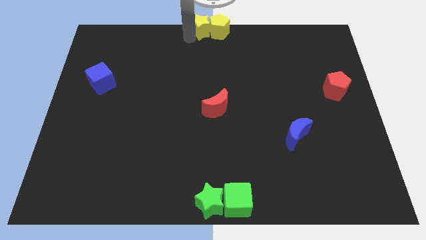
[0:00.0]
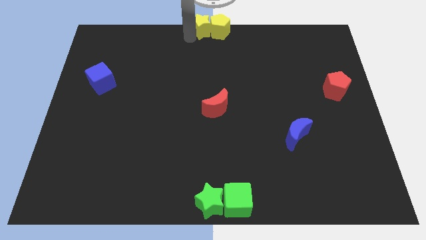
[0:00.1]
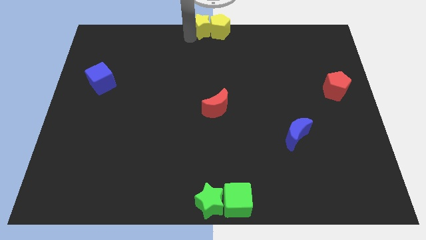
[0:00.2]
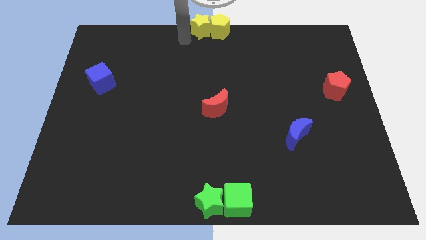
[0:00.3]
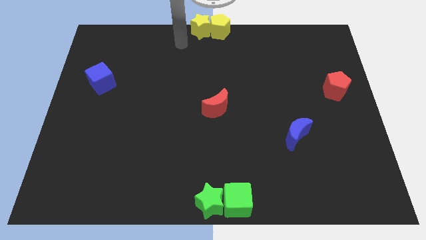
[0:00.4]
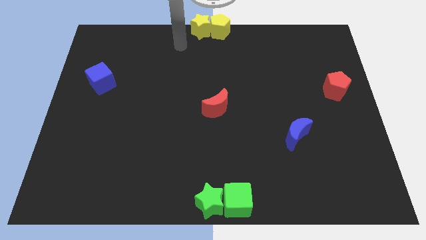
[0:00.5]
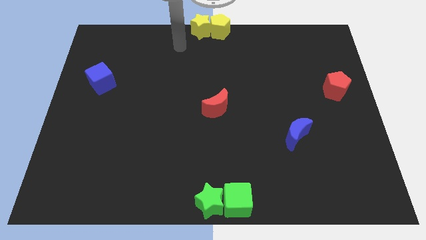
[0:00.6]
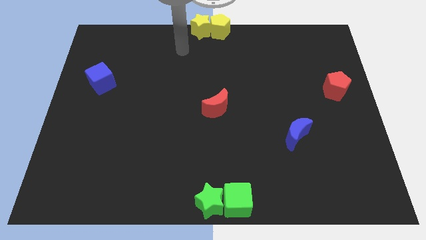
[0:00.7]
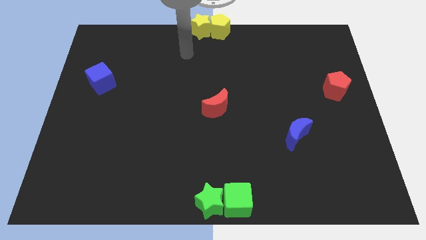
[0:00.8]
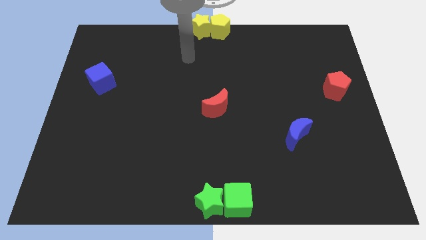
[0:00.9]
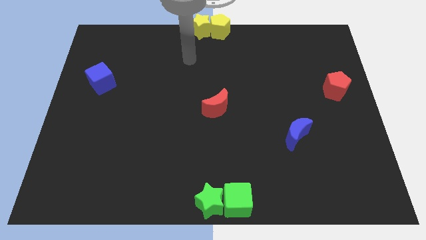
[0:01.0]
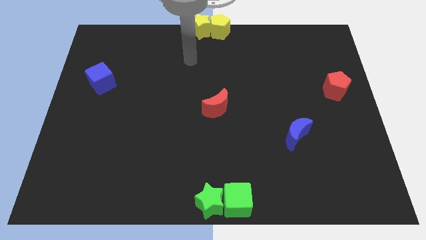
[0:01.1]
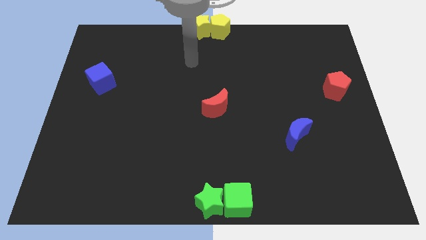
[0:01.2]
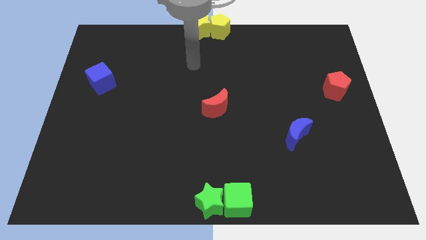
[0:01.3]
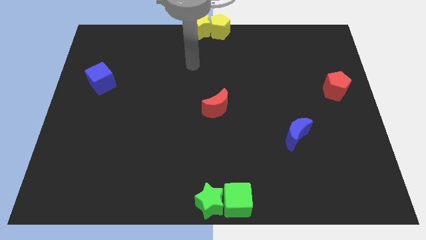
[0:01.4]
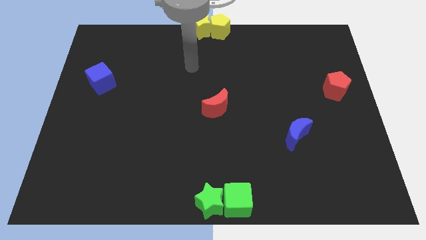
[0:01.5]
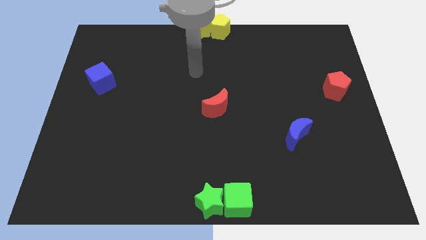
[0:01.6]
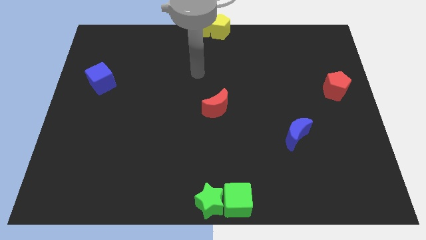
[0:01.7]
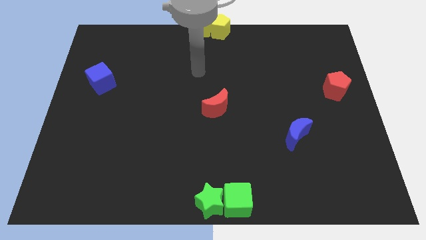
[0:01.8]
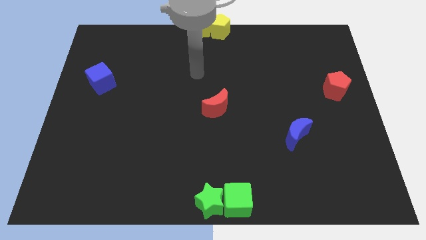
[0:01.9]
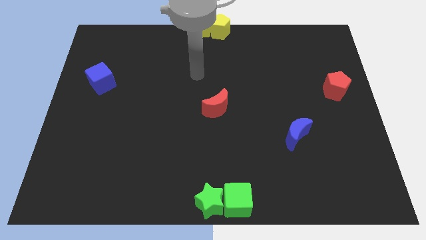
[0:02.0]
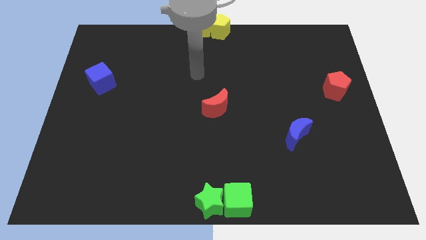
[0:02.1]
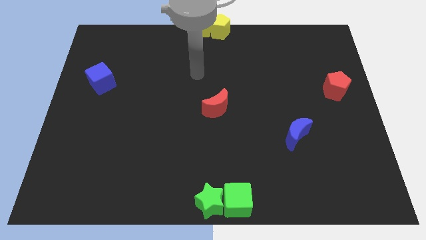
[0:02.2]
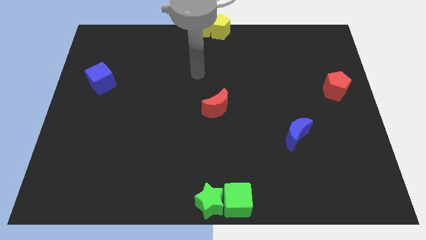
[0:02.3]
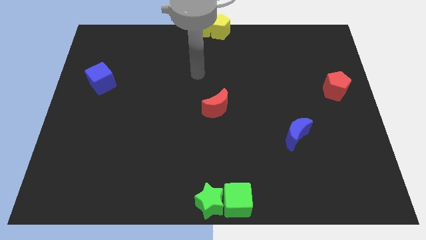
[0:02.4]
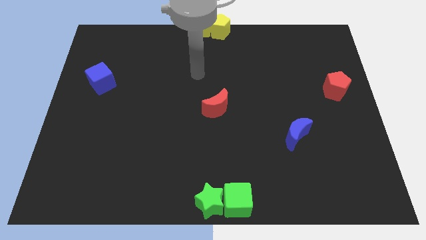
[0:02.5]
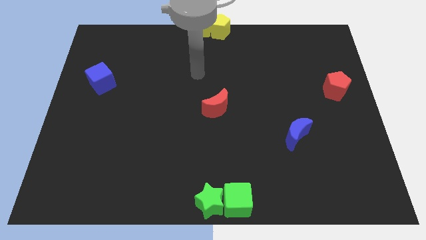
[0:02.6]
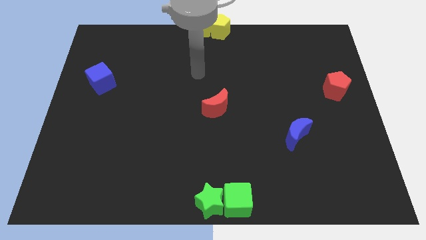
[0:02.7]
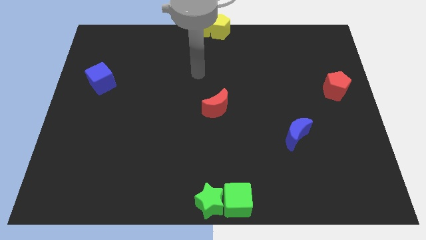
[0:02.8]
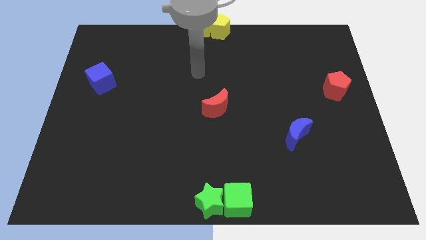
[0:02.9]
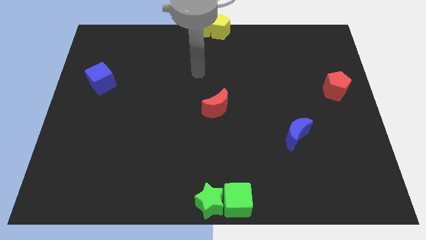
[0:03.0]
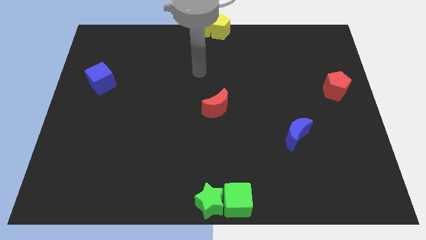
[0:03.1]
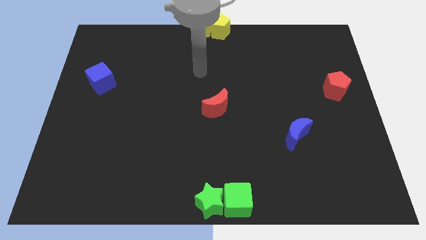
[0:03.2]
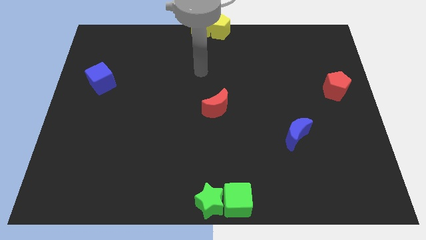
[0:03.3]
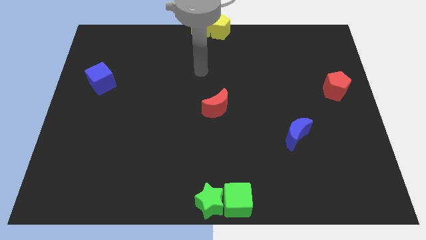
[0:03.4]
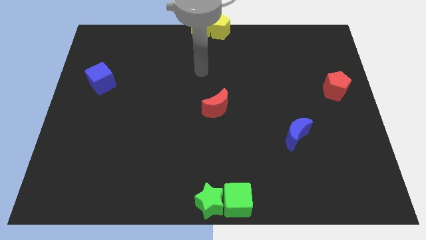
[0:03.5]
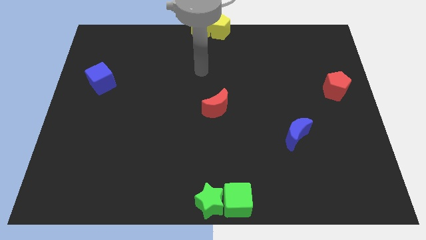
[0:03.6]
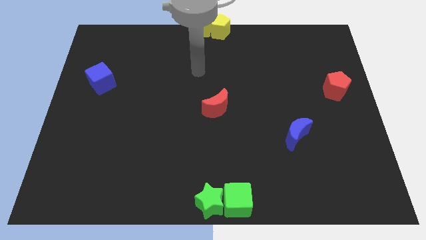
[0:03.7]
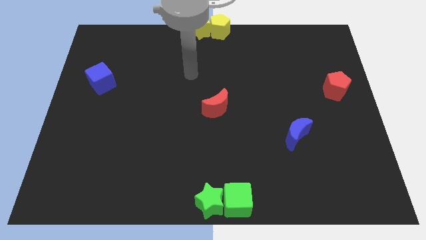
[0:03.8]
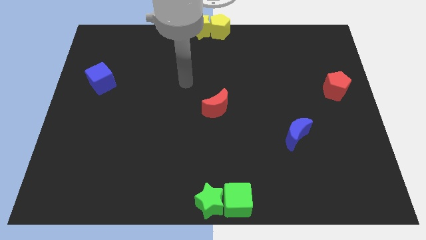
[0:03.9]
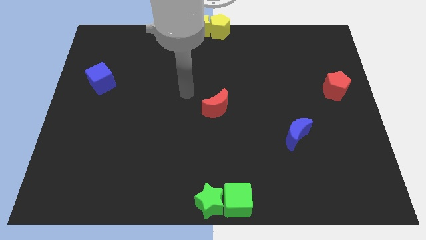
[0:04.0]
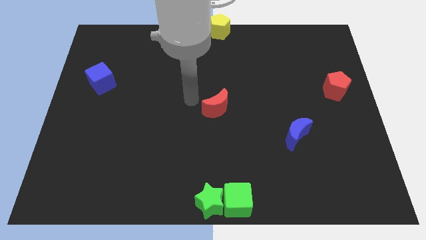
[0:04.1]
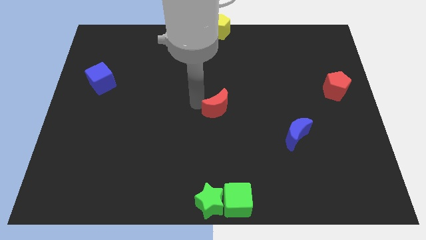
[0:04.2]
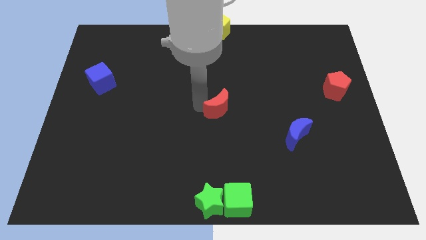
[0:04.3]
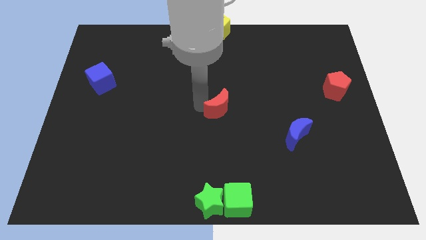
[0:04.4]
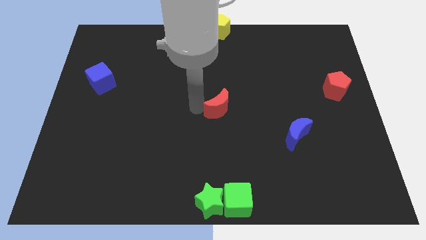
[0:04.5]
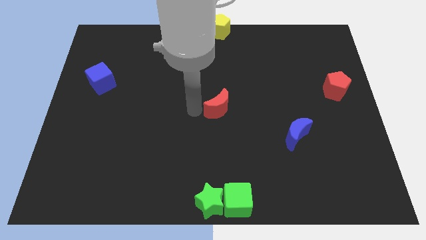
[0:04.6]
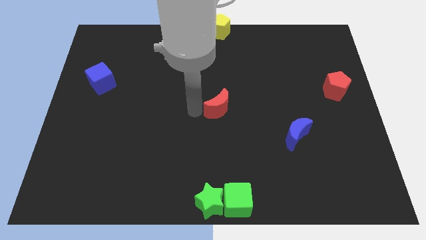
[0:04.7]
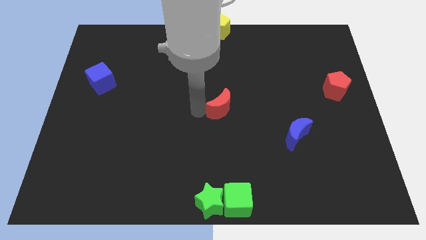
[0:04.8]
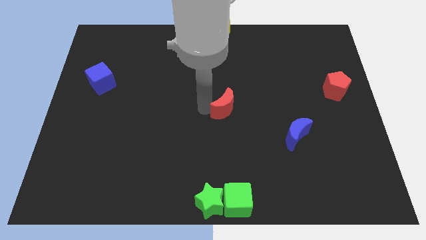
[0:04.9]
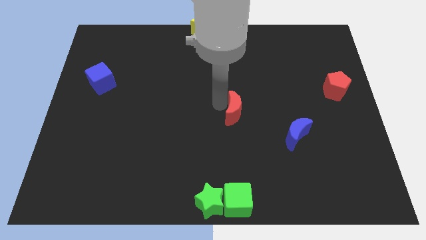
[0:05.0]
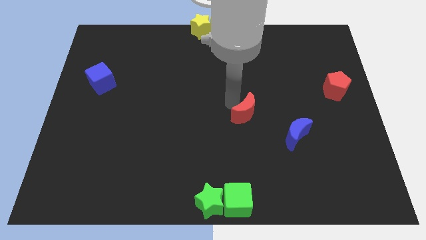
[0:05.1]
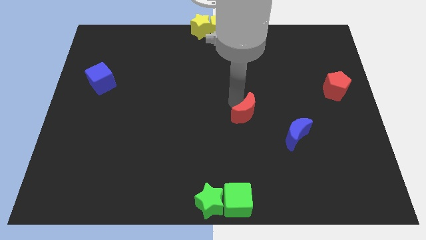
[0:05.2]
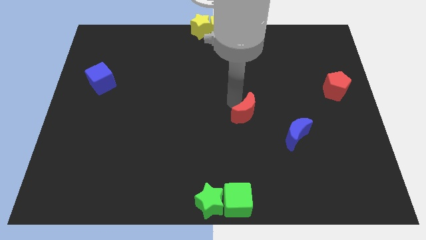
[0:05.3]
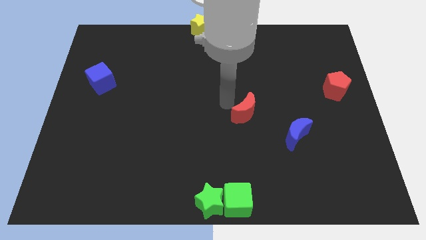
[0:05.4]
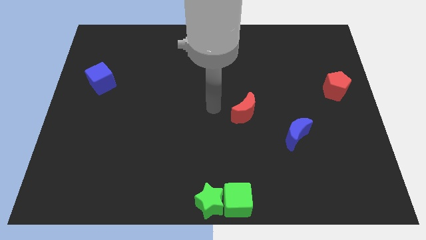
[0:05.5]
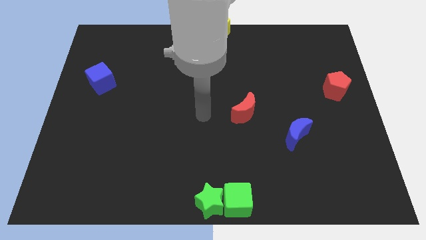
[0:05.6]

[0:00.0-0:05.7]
move the red moon above the green cube

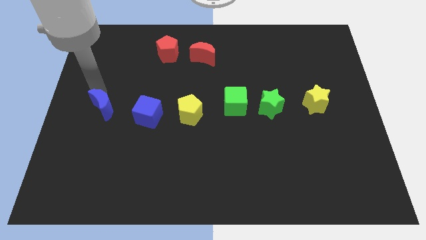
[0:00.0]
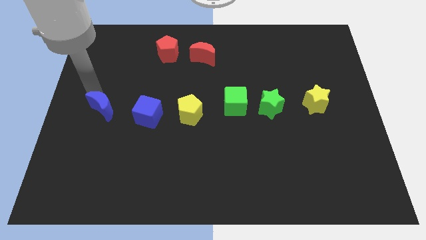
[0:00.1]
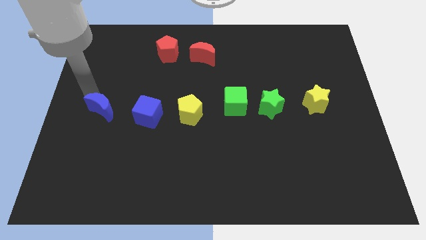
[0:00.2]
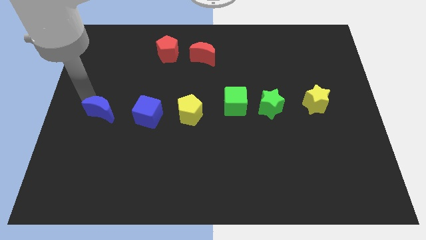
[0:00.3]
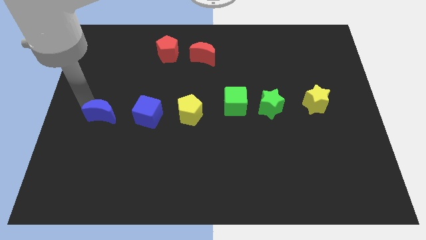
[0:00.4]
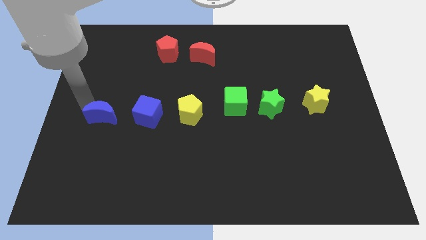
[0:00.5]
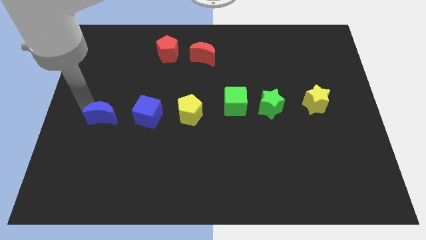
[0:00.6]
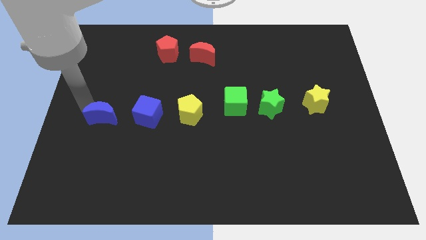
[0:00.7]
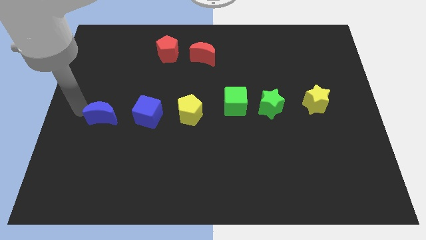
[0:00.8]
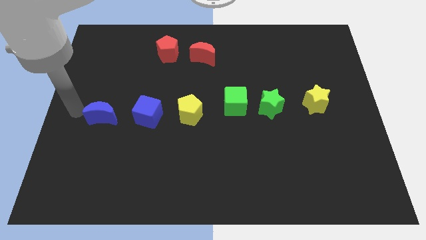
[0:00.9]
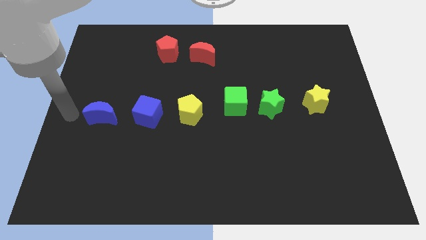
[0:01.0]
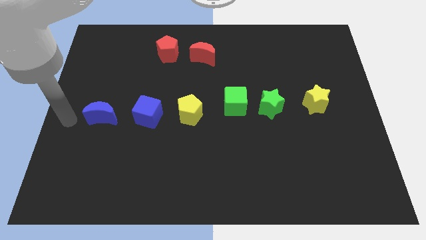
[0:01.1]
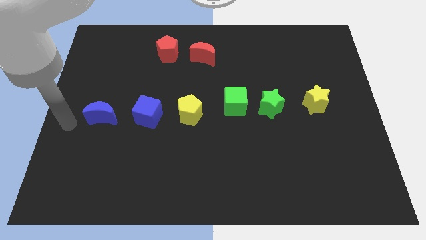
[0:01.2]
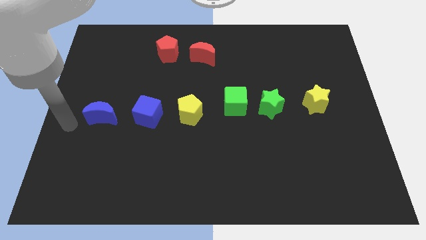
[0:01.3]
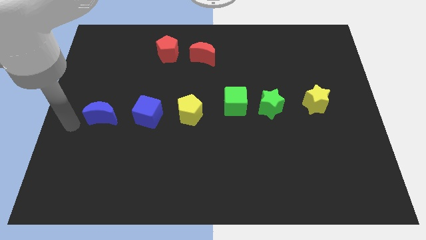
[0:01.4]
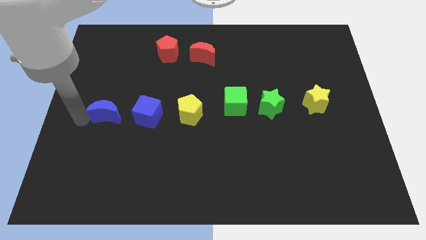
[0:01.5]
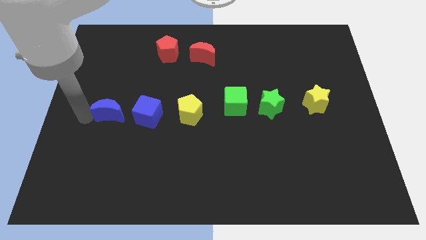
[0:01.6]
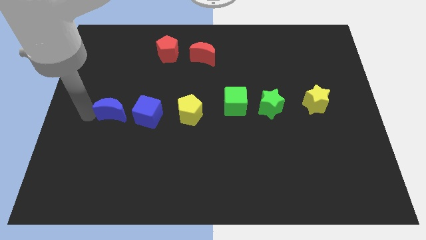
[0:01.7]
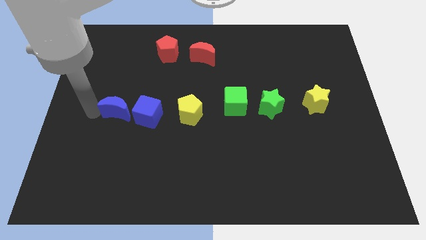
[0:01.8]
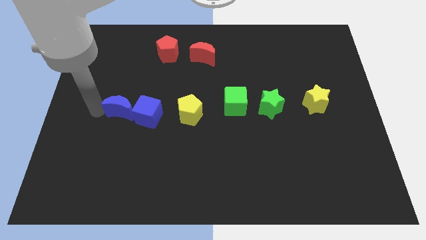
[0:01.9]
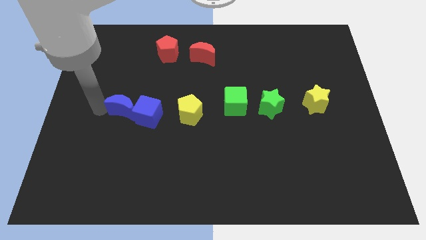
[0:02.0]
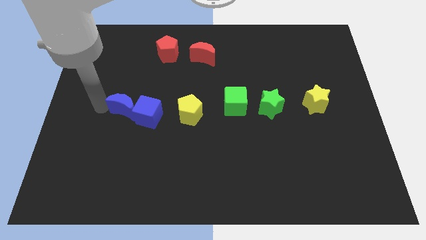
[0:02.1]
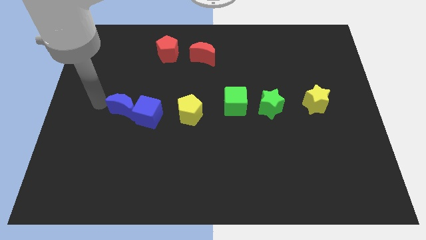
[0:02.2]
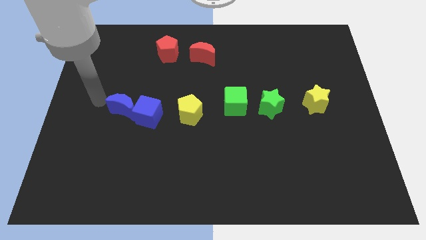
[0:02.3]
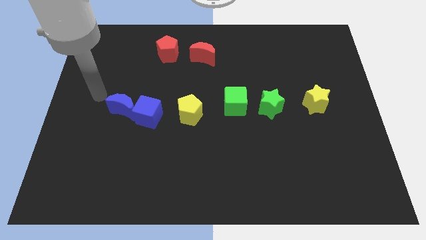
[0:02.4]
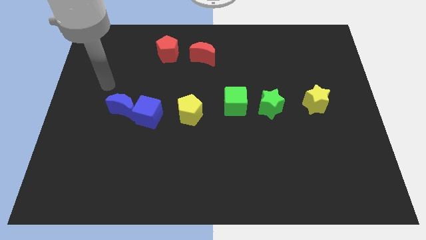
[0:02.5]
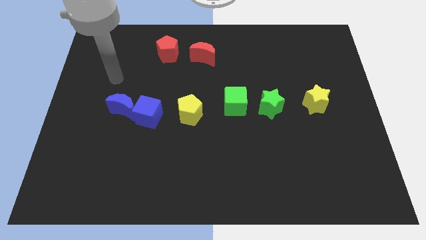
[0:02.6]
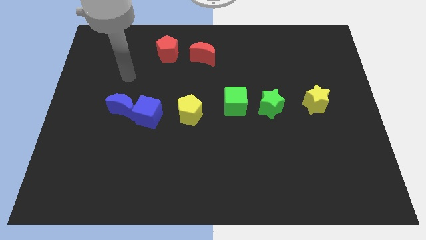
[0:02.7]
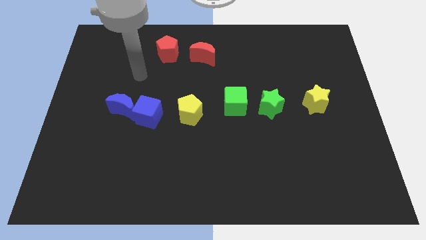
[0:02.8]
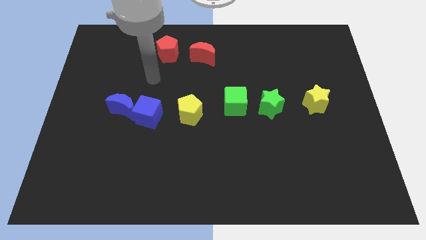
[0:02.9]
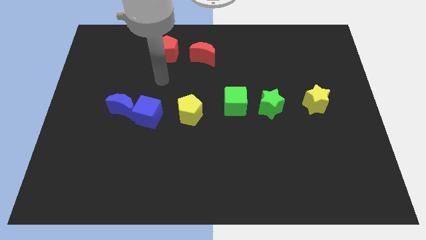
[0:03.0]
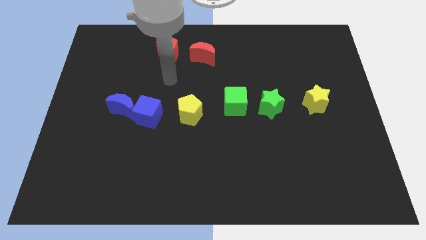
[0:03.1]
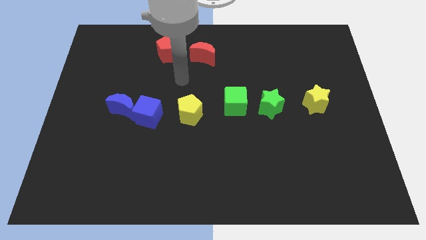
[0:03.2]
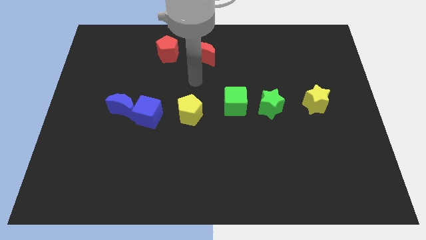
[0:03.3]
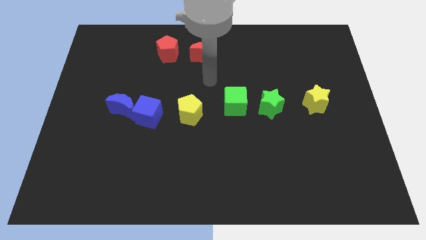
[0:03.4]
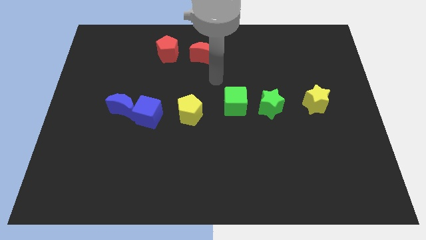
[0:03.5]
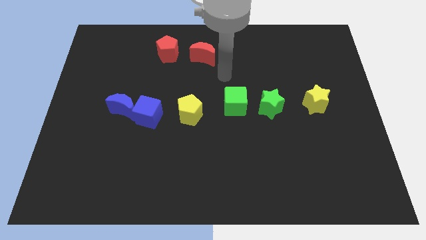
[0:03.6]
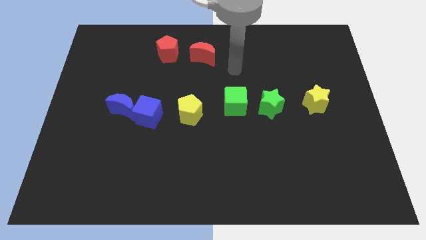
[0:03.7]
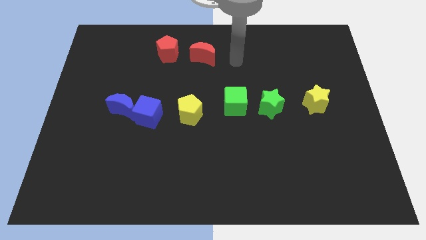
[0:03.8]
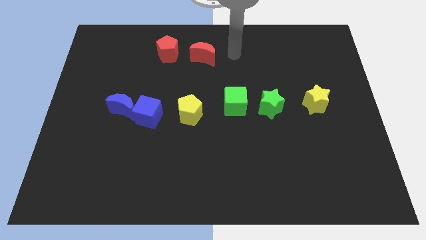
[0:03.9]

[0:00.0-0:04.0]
place your arm to the right of red moon
